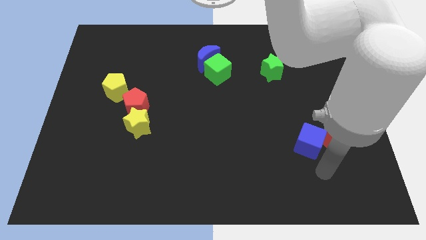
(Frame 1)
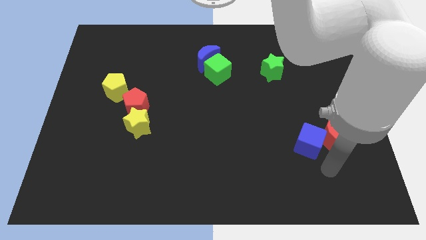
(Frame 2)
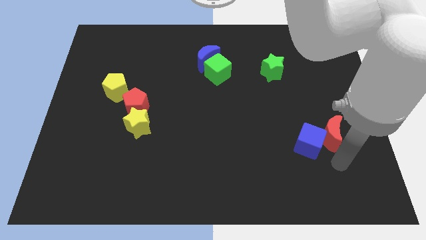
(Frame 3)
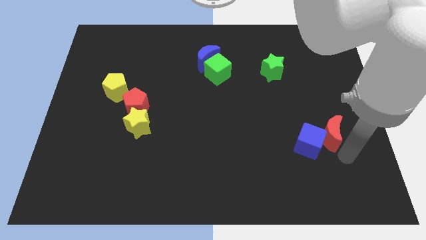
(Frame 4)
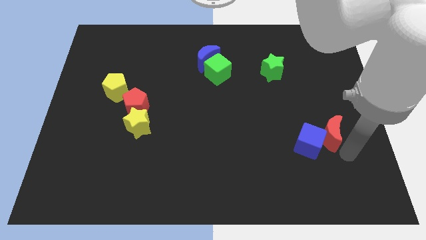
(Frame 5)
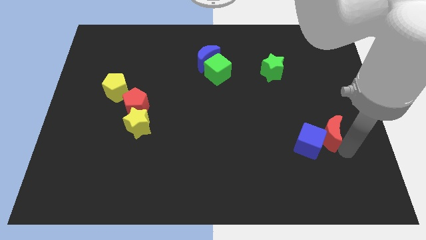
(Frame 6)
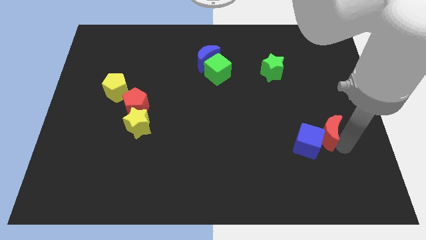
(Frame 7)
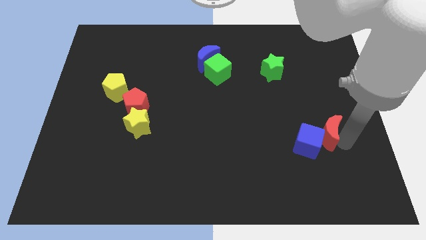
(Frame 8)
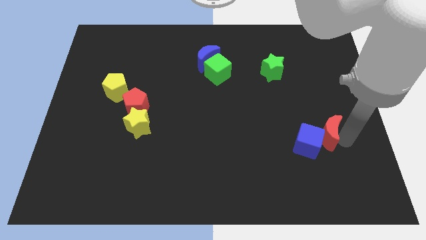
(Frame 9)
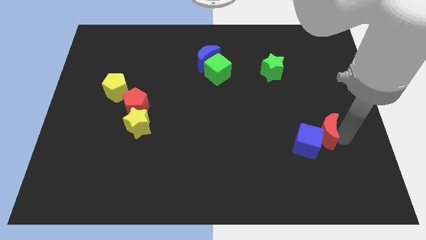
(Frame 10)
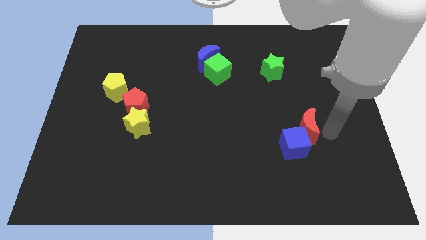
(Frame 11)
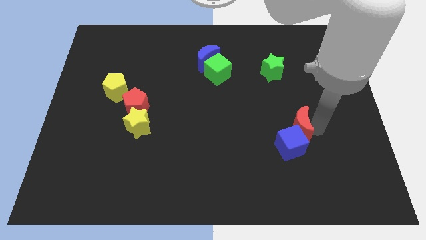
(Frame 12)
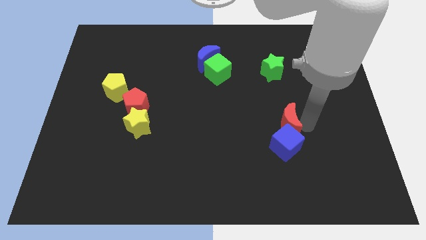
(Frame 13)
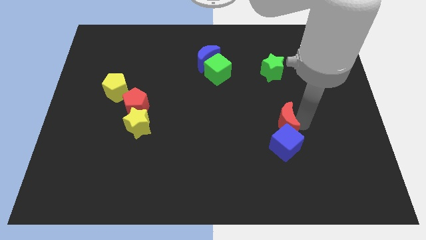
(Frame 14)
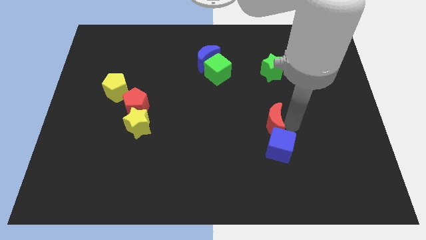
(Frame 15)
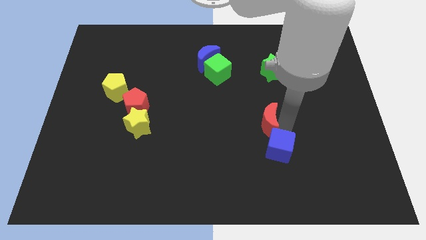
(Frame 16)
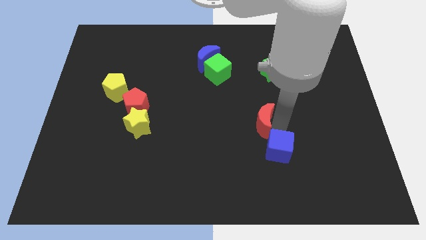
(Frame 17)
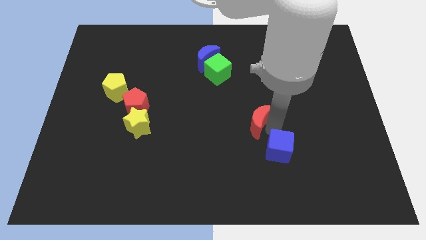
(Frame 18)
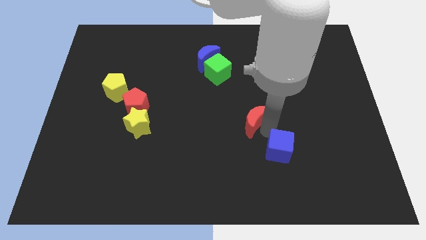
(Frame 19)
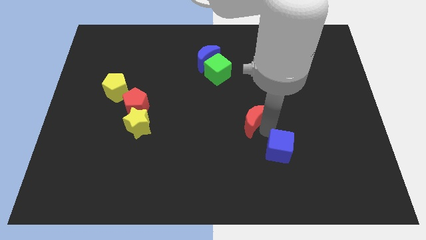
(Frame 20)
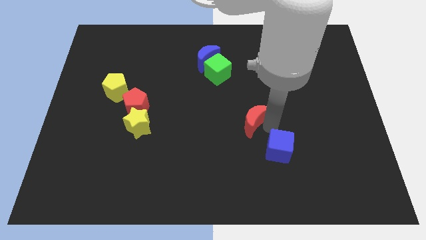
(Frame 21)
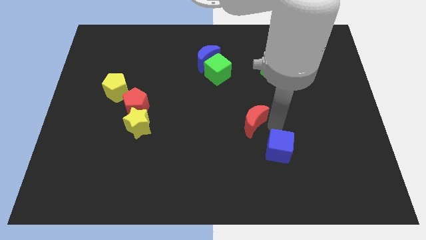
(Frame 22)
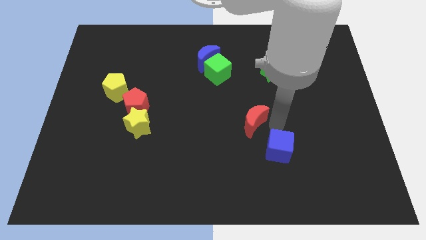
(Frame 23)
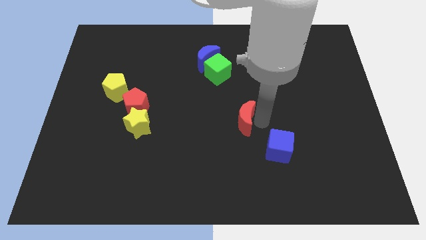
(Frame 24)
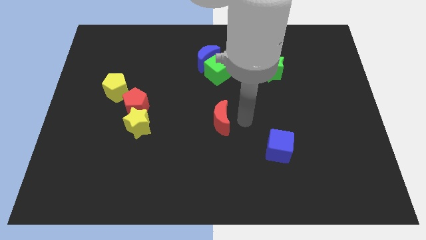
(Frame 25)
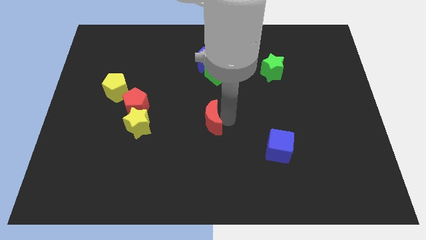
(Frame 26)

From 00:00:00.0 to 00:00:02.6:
move the red crescent to center of the board

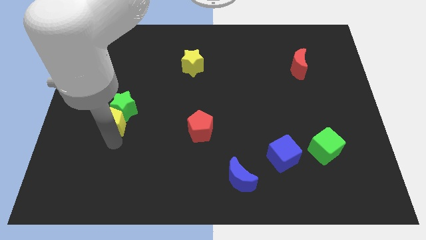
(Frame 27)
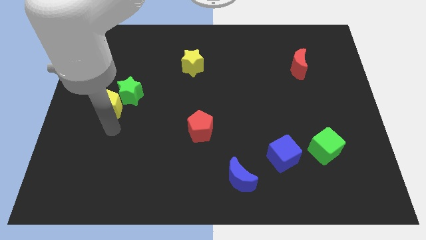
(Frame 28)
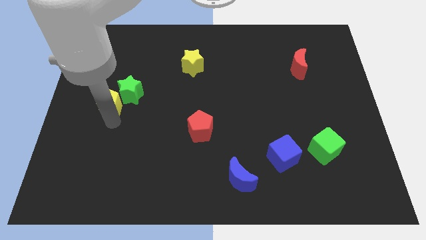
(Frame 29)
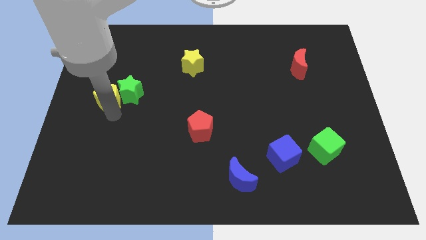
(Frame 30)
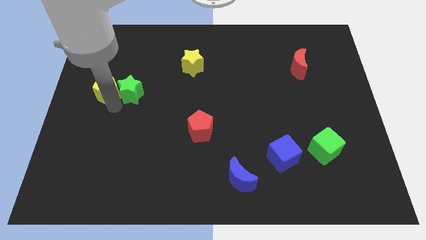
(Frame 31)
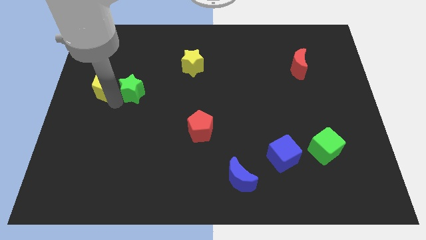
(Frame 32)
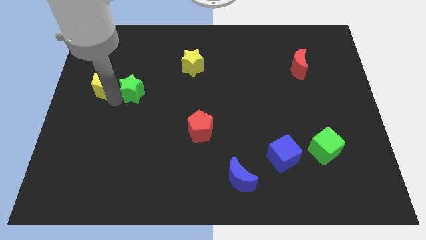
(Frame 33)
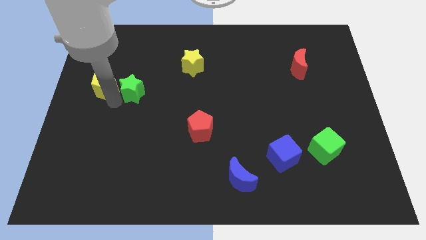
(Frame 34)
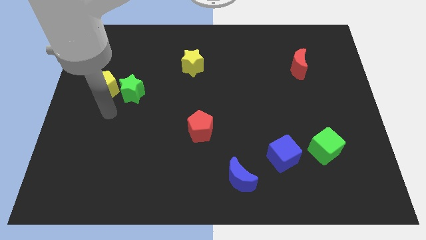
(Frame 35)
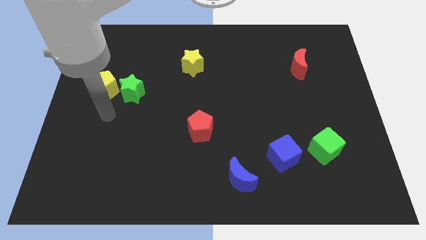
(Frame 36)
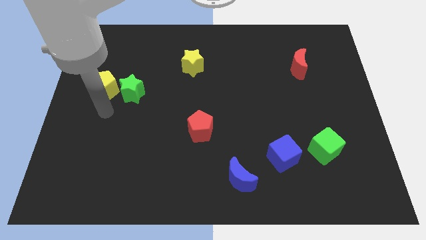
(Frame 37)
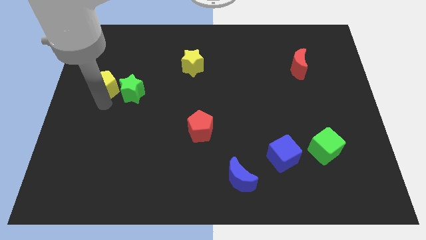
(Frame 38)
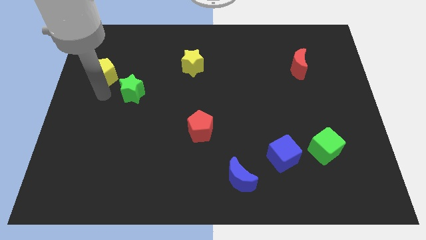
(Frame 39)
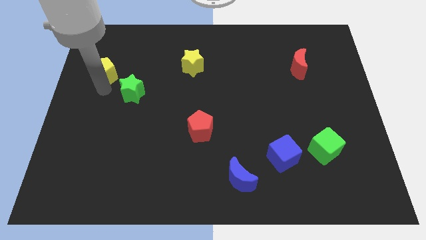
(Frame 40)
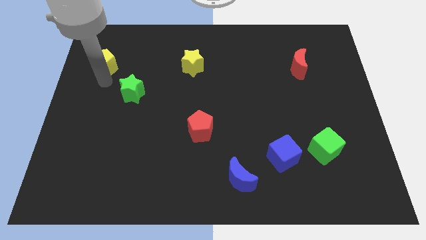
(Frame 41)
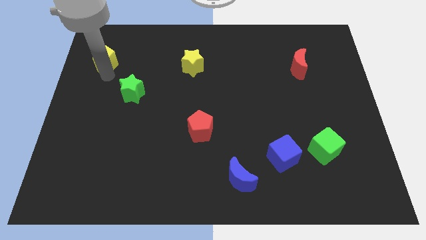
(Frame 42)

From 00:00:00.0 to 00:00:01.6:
move the yellow star to the top left side of the green star

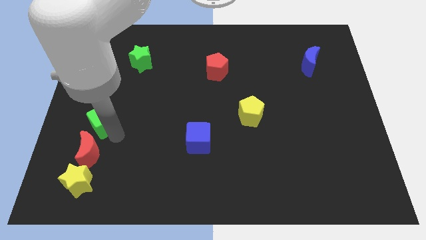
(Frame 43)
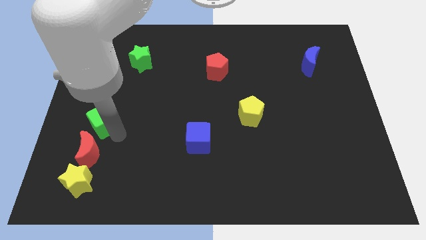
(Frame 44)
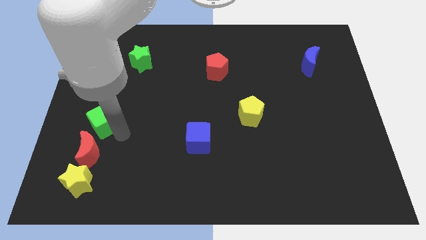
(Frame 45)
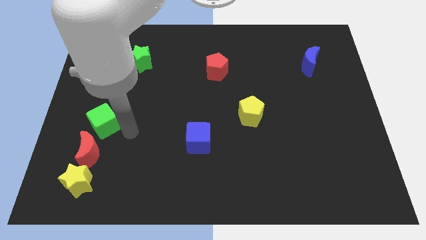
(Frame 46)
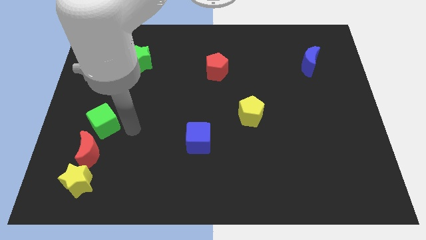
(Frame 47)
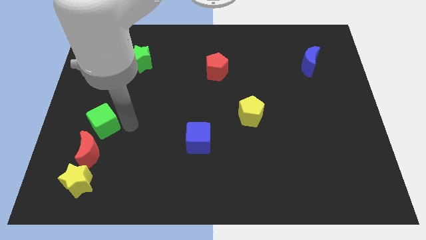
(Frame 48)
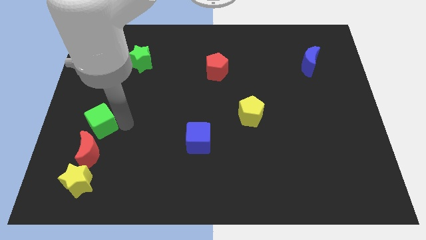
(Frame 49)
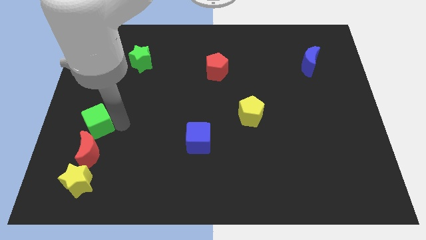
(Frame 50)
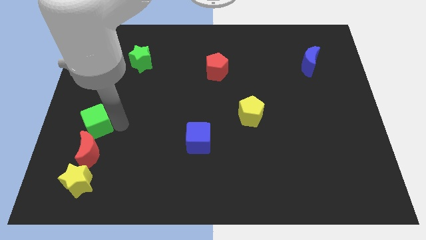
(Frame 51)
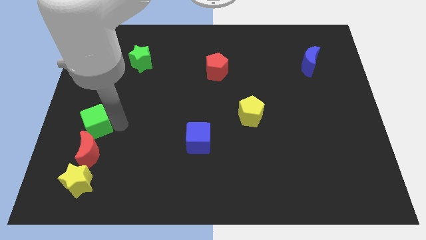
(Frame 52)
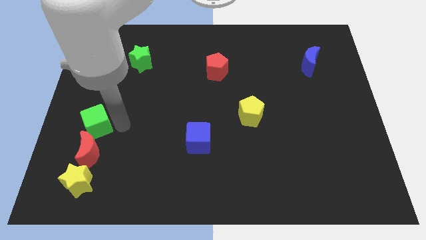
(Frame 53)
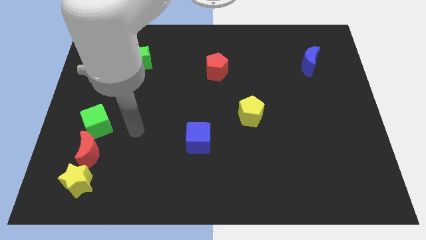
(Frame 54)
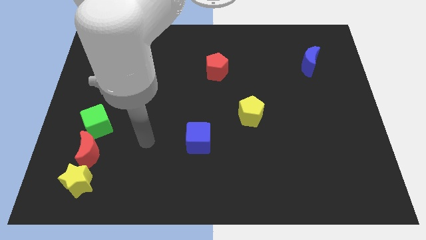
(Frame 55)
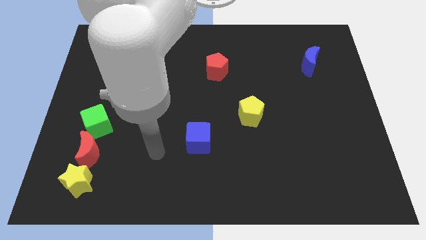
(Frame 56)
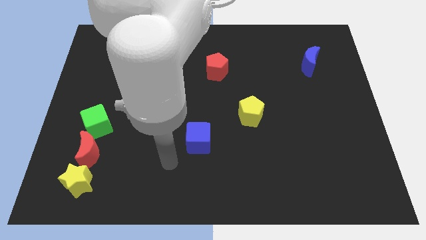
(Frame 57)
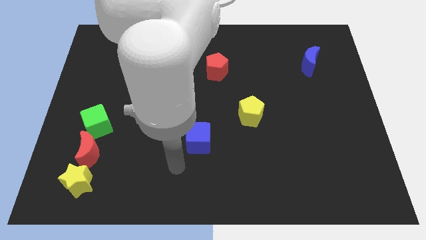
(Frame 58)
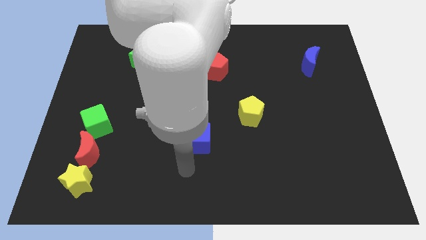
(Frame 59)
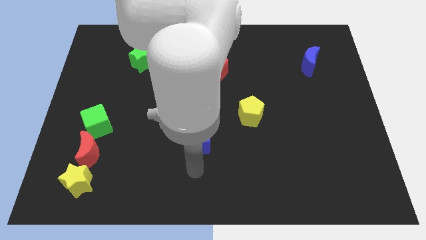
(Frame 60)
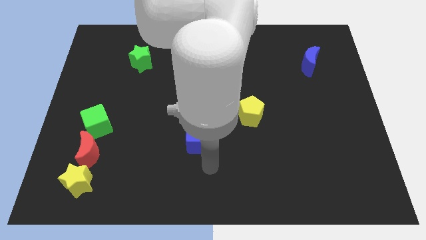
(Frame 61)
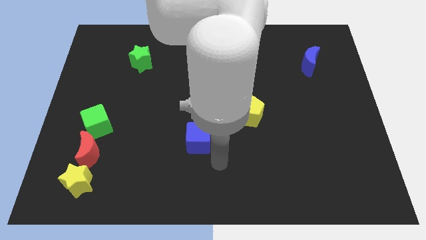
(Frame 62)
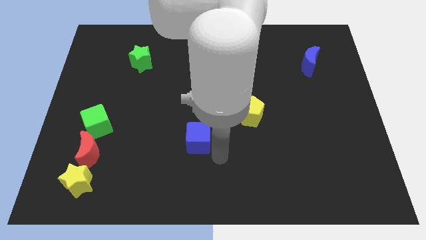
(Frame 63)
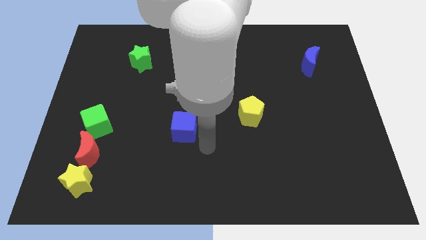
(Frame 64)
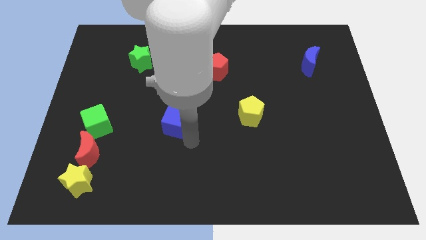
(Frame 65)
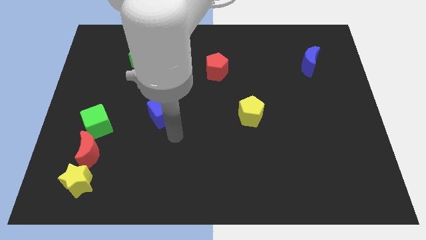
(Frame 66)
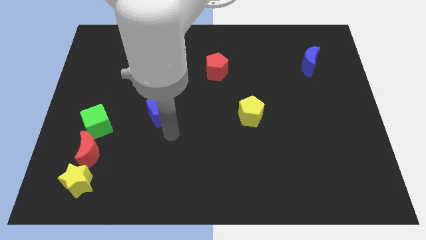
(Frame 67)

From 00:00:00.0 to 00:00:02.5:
slightly push the blue cube to the right side of green cube

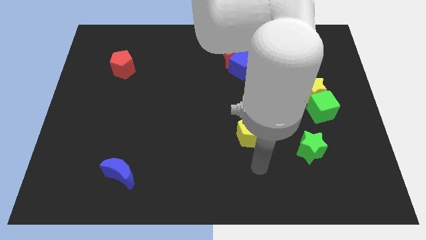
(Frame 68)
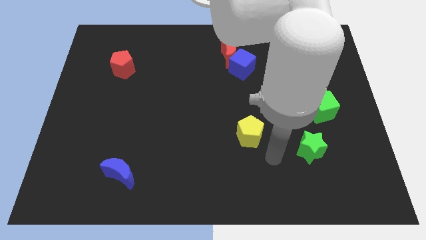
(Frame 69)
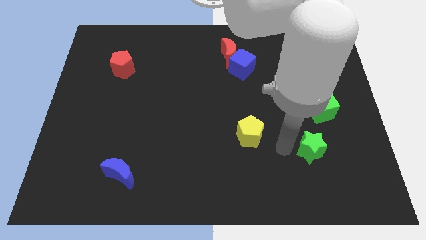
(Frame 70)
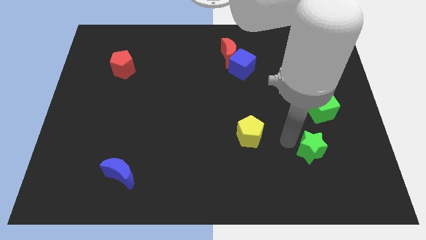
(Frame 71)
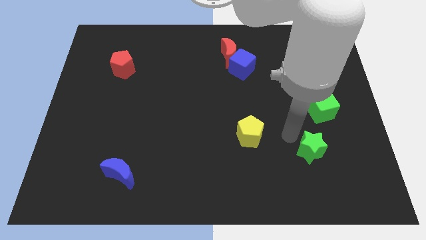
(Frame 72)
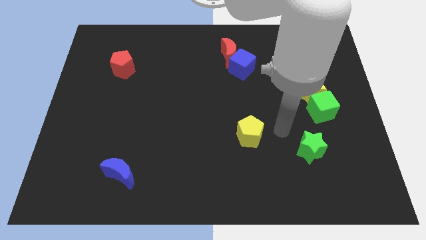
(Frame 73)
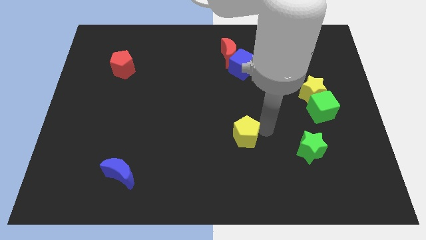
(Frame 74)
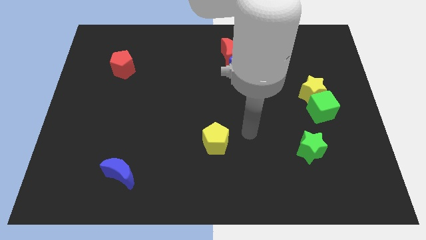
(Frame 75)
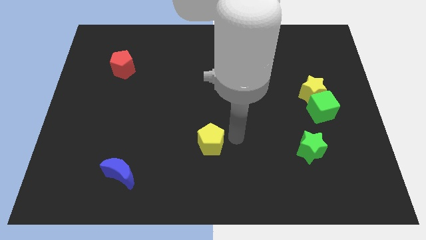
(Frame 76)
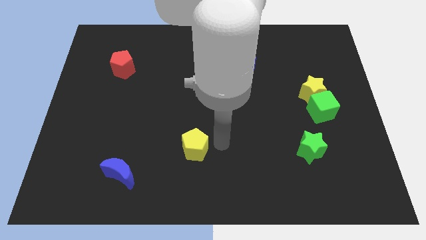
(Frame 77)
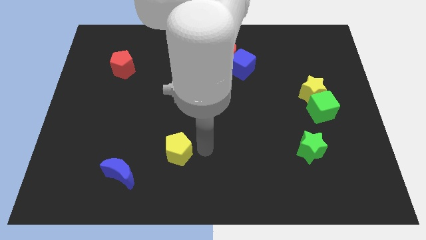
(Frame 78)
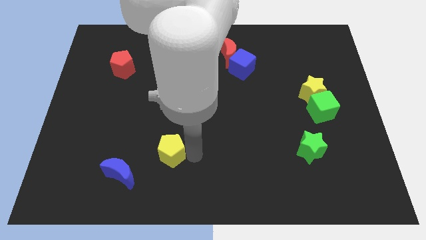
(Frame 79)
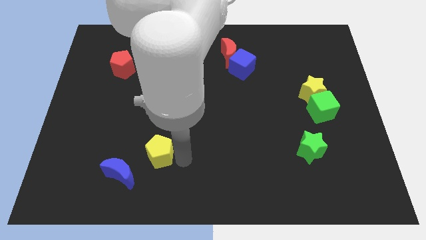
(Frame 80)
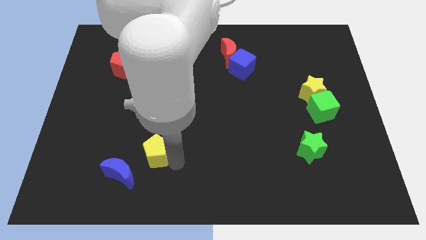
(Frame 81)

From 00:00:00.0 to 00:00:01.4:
push the yellow pentagon towards the left side of the board

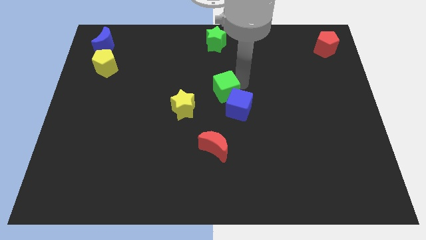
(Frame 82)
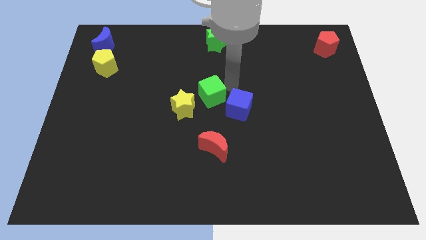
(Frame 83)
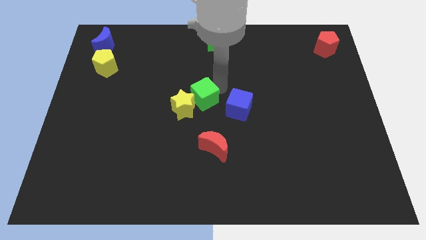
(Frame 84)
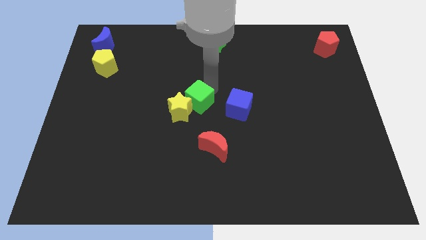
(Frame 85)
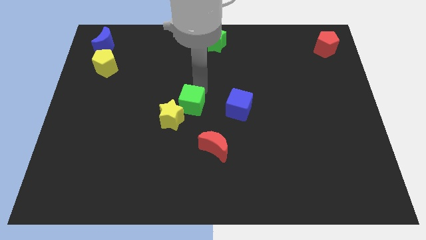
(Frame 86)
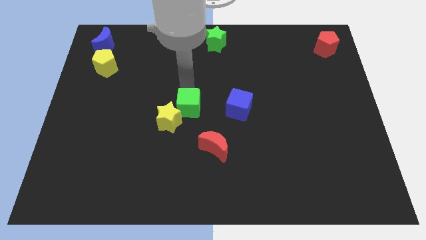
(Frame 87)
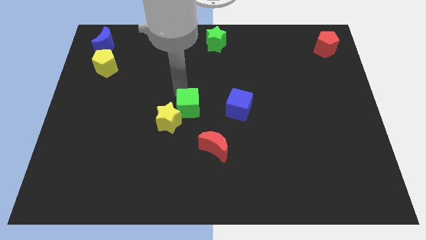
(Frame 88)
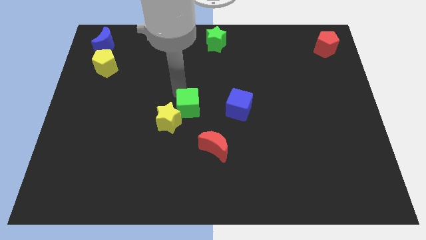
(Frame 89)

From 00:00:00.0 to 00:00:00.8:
push the green cube towards the yellow star
